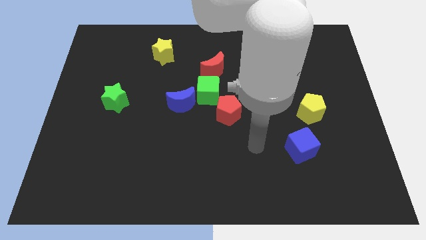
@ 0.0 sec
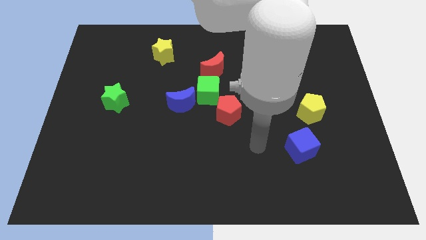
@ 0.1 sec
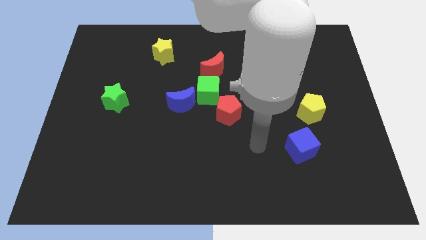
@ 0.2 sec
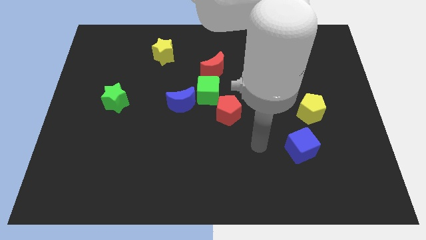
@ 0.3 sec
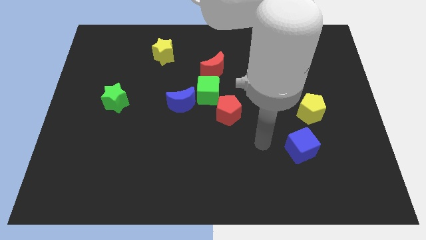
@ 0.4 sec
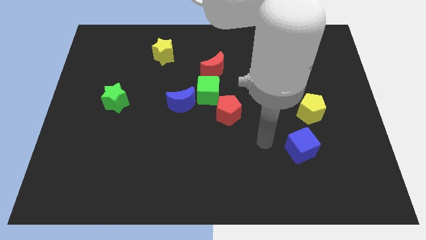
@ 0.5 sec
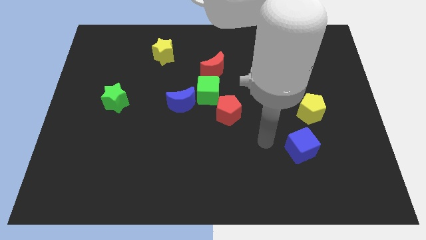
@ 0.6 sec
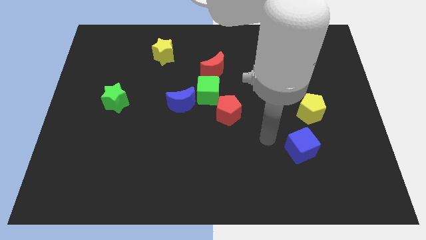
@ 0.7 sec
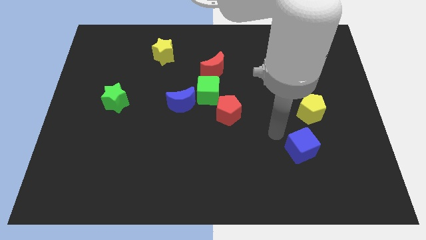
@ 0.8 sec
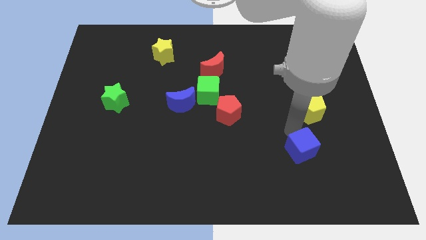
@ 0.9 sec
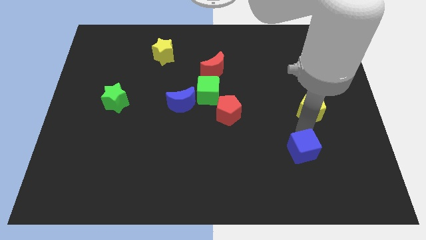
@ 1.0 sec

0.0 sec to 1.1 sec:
touch the top of blue cube

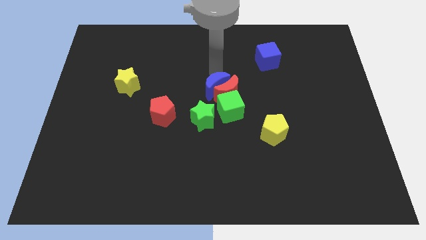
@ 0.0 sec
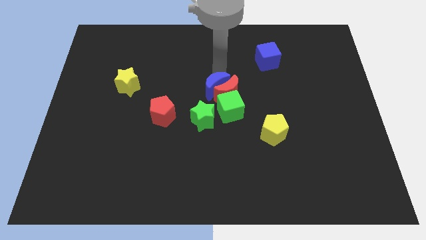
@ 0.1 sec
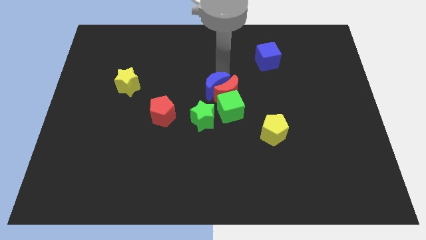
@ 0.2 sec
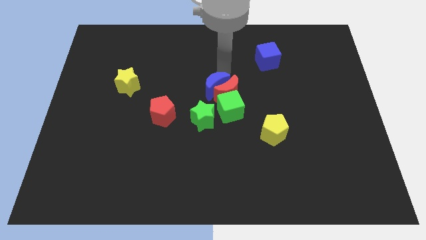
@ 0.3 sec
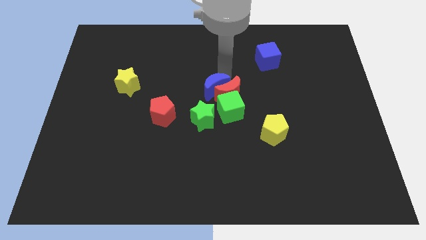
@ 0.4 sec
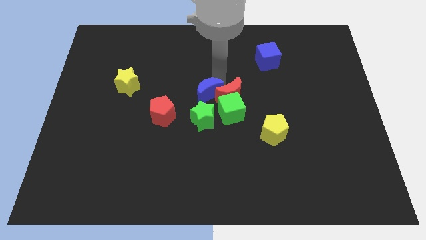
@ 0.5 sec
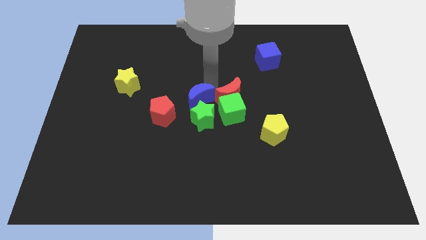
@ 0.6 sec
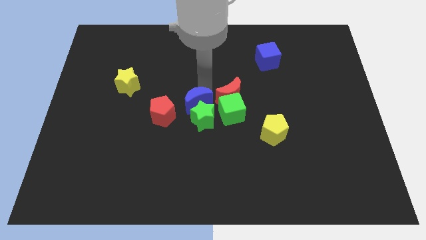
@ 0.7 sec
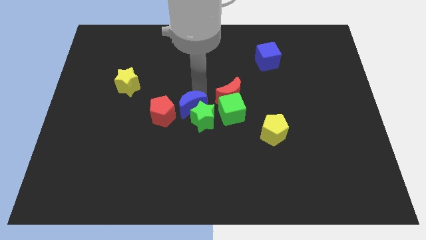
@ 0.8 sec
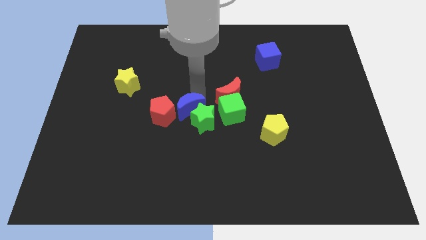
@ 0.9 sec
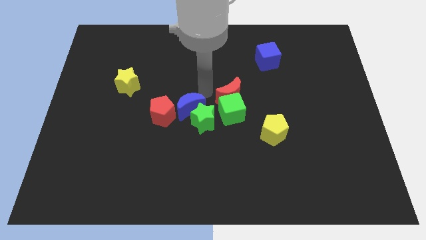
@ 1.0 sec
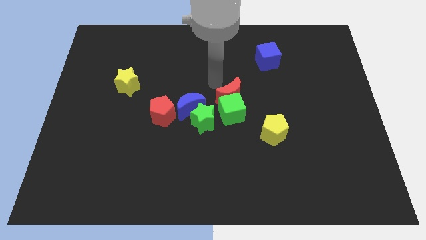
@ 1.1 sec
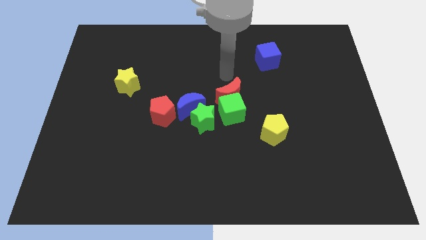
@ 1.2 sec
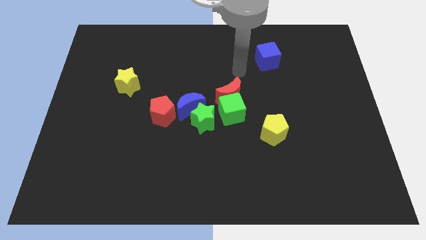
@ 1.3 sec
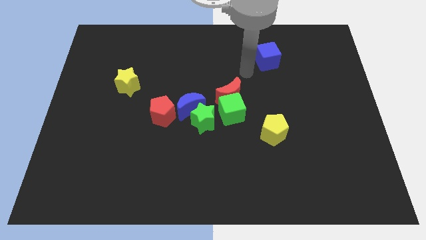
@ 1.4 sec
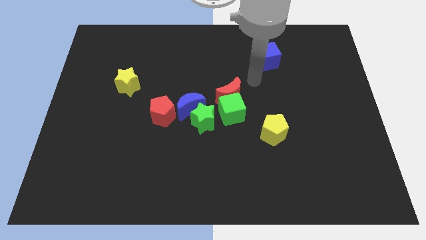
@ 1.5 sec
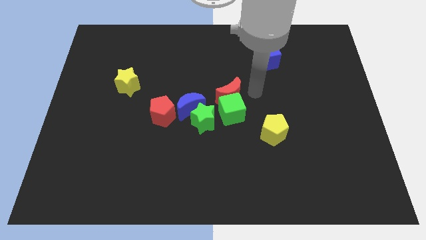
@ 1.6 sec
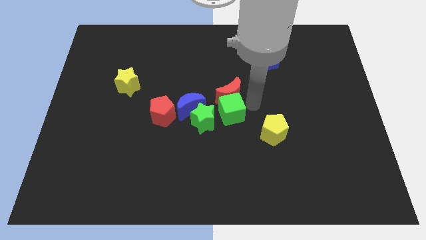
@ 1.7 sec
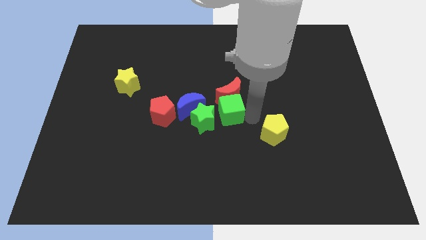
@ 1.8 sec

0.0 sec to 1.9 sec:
push the blue moon towards the red pentagon

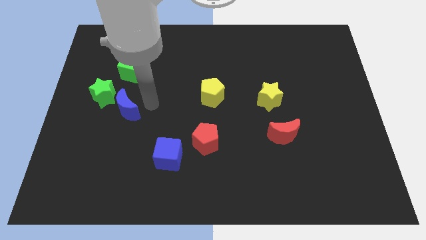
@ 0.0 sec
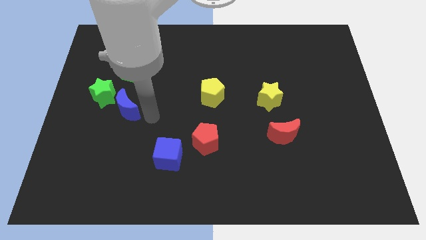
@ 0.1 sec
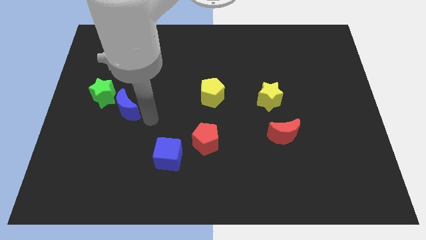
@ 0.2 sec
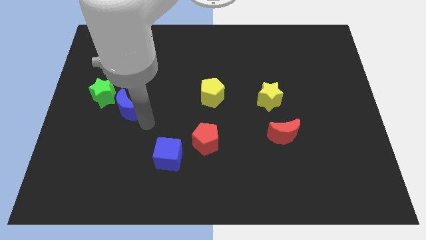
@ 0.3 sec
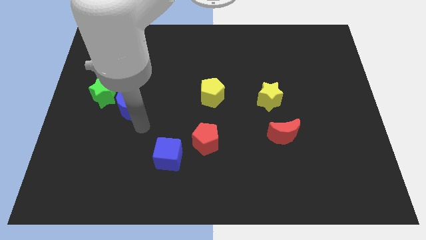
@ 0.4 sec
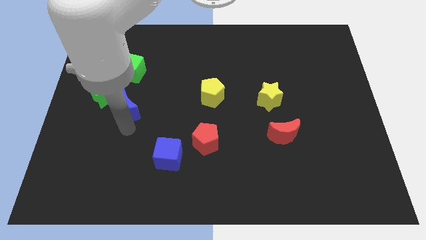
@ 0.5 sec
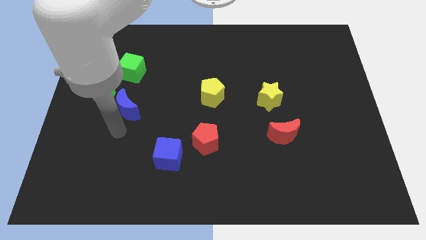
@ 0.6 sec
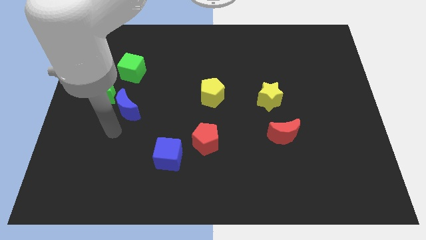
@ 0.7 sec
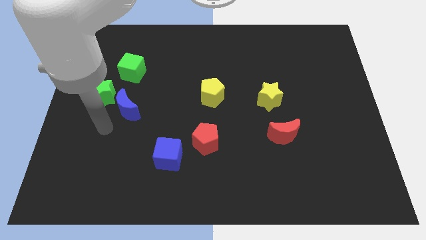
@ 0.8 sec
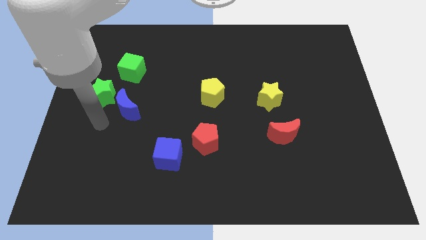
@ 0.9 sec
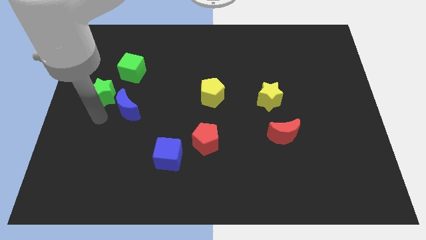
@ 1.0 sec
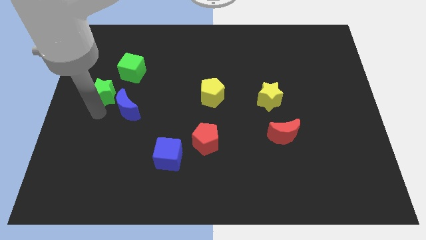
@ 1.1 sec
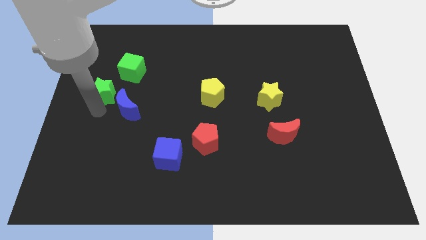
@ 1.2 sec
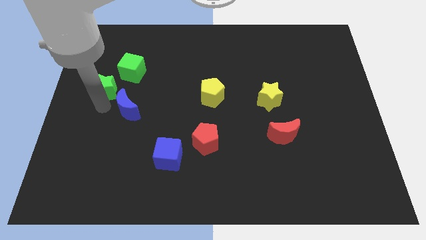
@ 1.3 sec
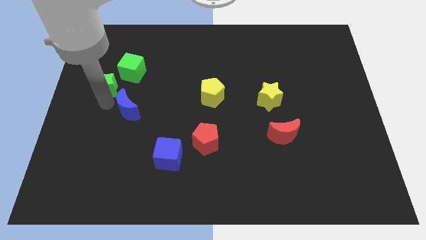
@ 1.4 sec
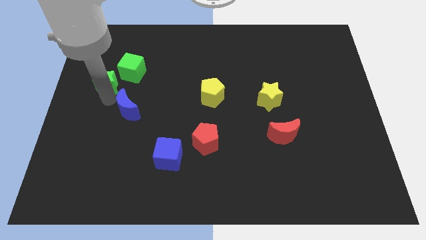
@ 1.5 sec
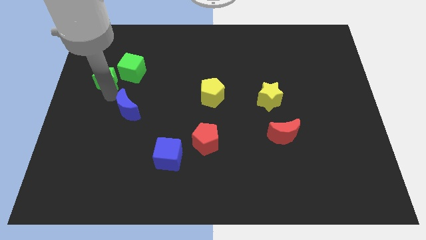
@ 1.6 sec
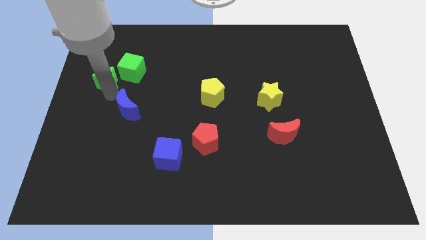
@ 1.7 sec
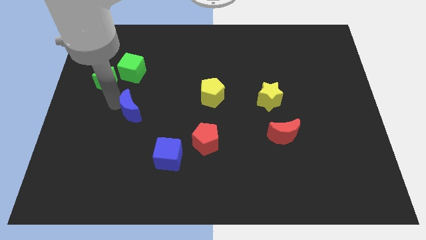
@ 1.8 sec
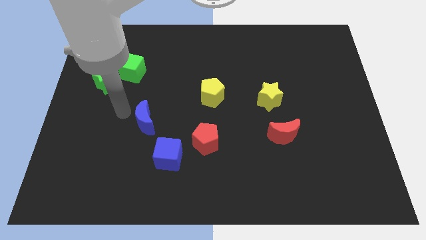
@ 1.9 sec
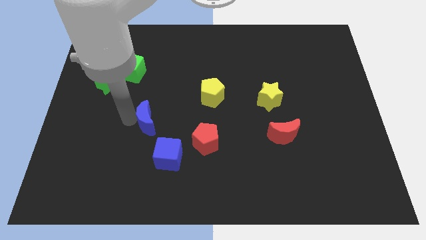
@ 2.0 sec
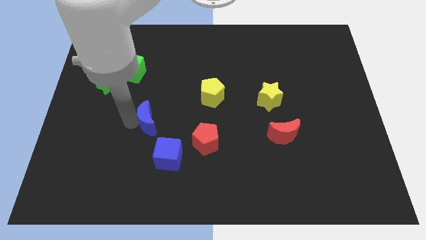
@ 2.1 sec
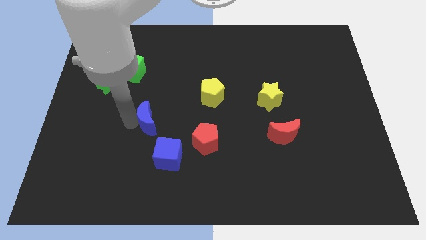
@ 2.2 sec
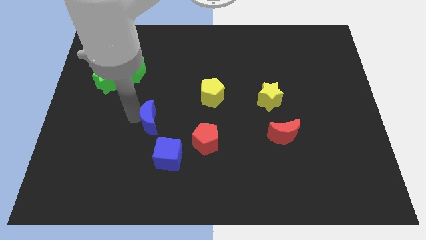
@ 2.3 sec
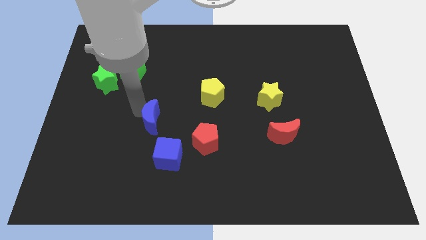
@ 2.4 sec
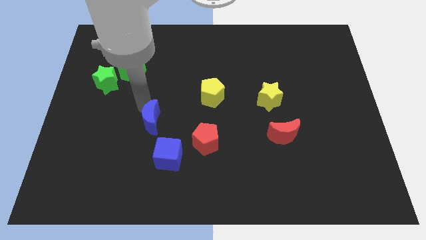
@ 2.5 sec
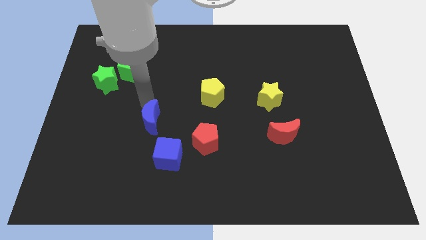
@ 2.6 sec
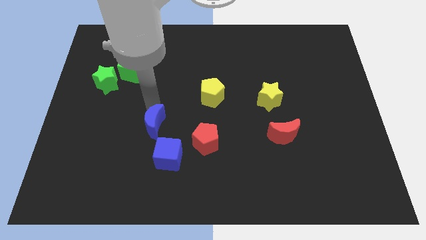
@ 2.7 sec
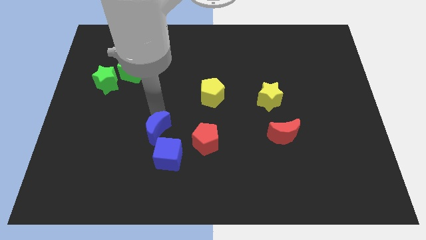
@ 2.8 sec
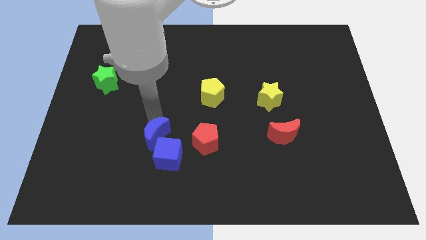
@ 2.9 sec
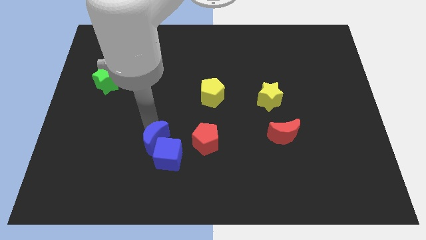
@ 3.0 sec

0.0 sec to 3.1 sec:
separate the green star and blue moon

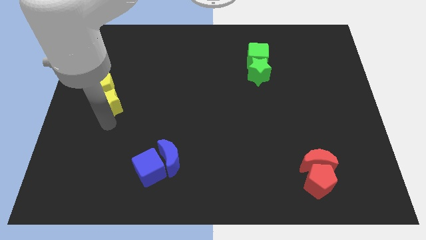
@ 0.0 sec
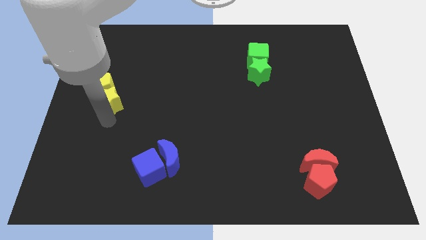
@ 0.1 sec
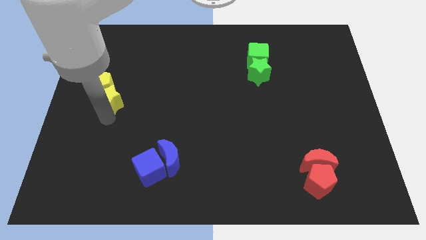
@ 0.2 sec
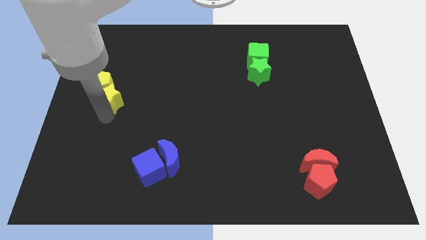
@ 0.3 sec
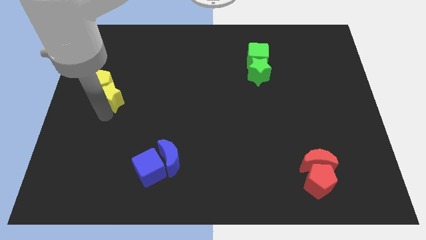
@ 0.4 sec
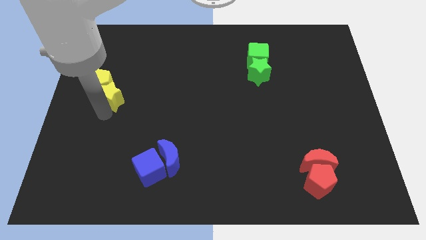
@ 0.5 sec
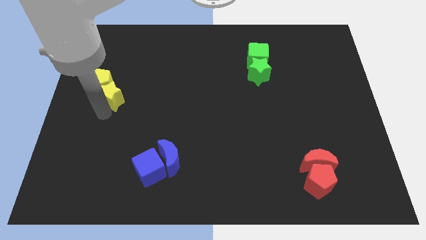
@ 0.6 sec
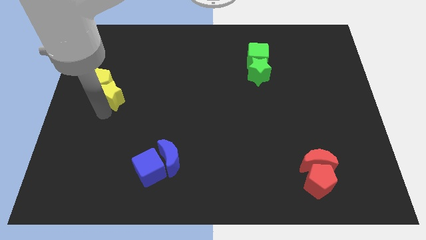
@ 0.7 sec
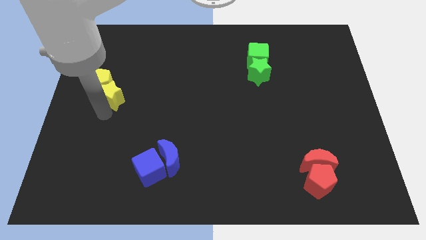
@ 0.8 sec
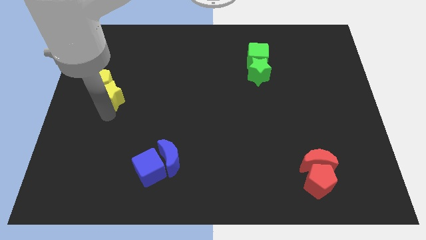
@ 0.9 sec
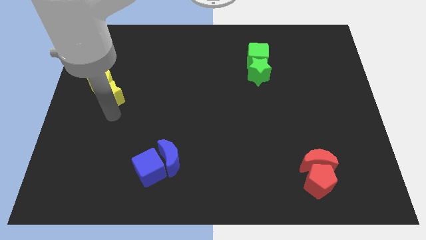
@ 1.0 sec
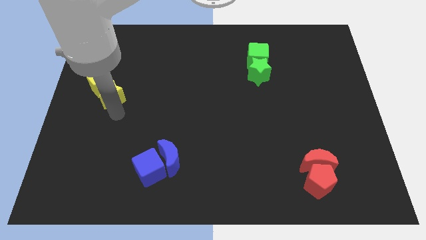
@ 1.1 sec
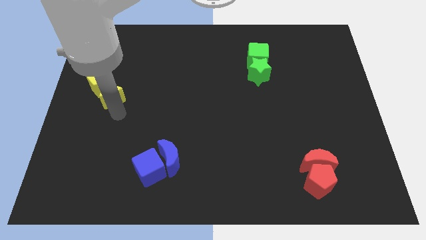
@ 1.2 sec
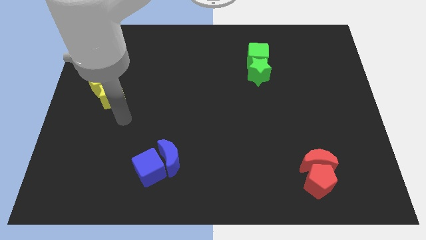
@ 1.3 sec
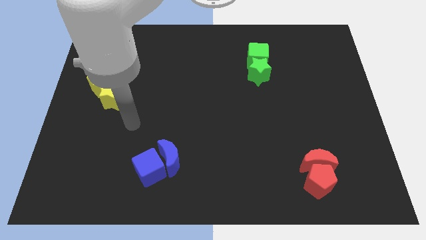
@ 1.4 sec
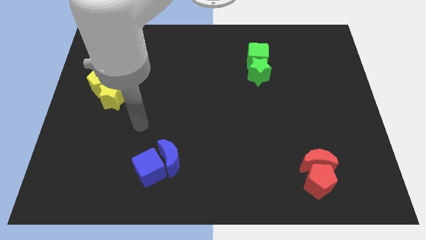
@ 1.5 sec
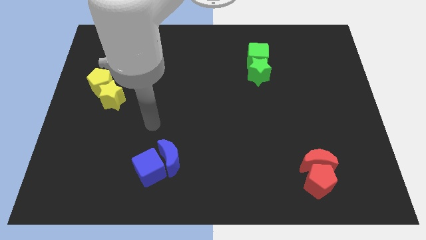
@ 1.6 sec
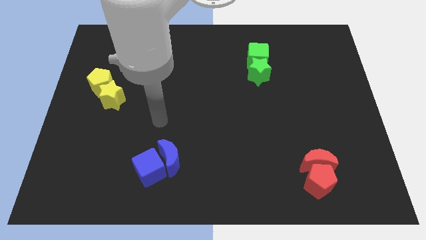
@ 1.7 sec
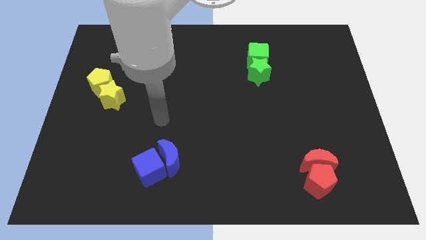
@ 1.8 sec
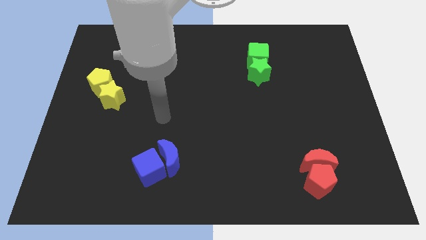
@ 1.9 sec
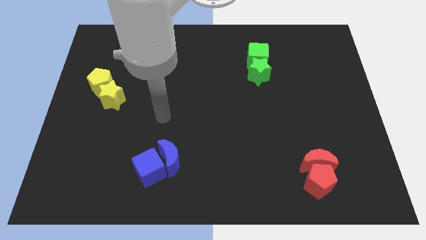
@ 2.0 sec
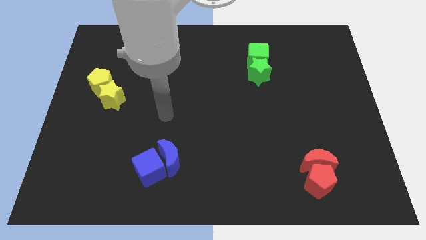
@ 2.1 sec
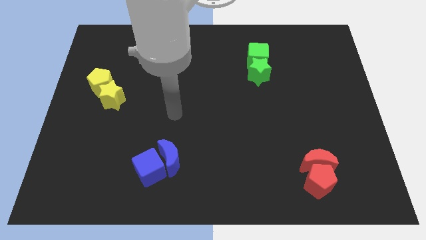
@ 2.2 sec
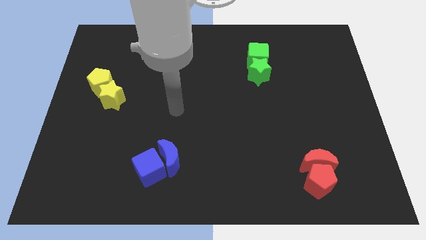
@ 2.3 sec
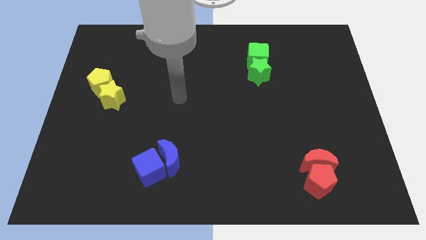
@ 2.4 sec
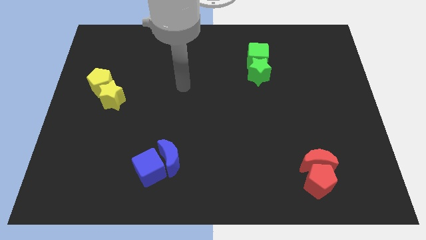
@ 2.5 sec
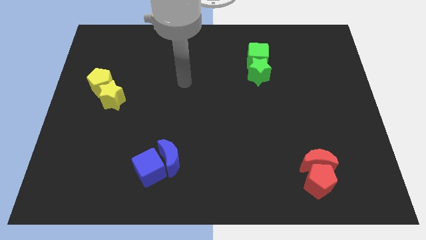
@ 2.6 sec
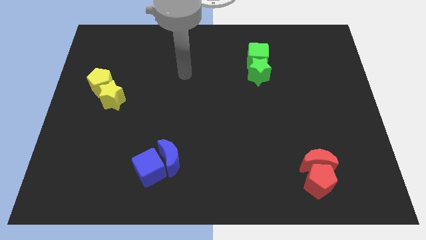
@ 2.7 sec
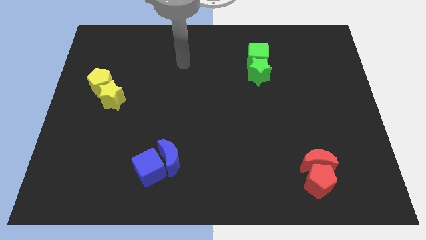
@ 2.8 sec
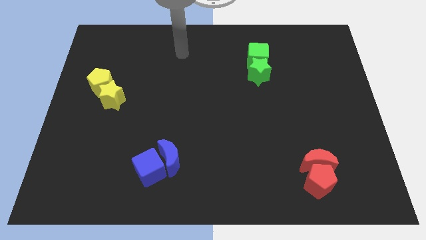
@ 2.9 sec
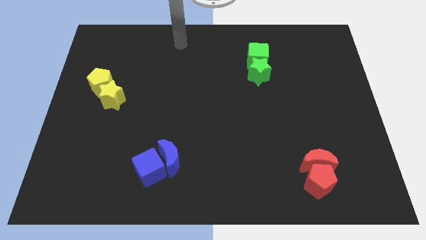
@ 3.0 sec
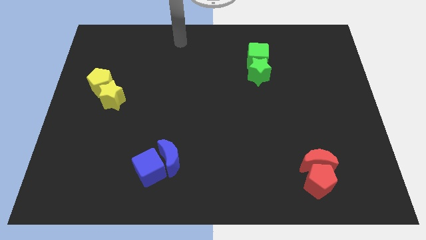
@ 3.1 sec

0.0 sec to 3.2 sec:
slide your arm towards top center
